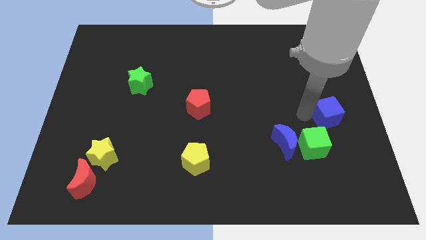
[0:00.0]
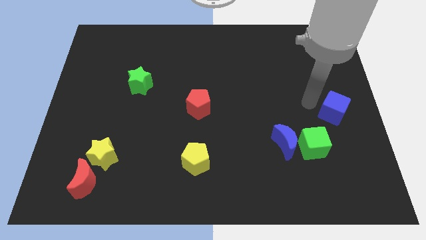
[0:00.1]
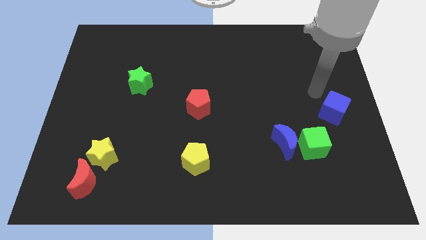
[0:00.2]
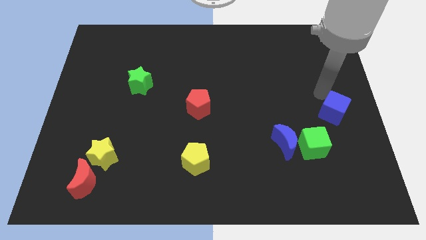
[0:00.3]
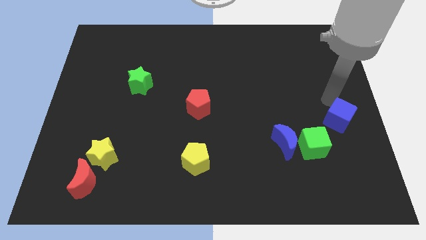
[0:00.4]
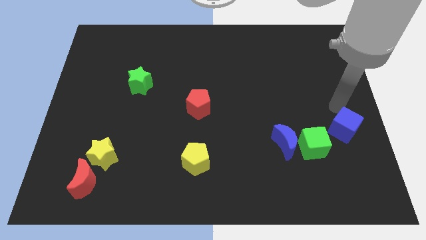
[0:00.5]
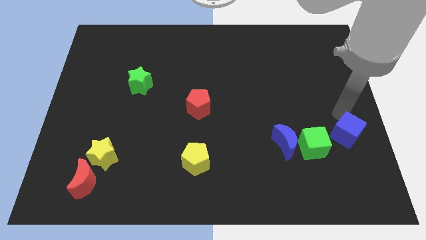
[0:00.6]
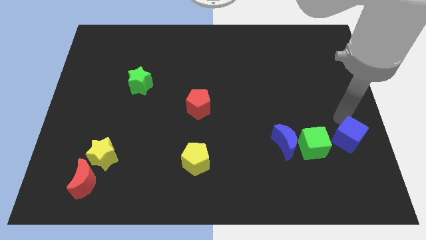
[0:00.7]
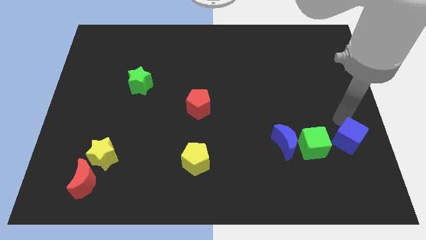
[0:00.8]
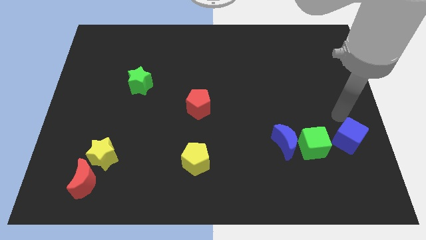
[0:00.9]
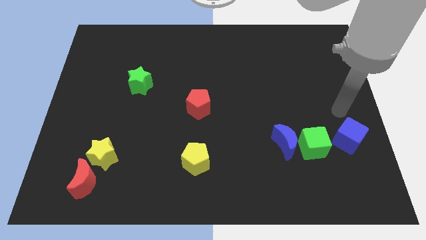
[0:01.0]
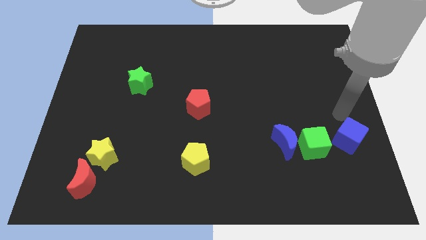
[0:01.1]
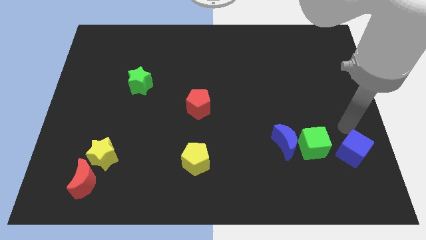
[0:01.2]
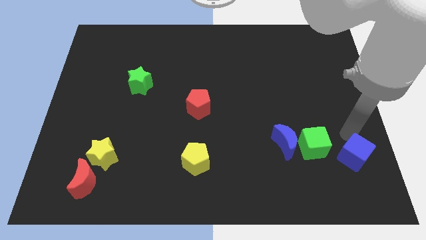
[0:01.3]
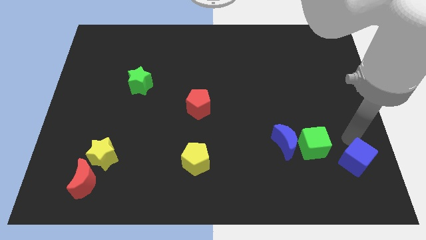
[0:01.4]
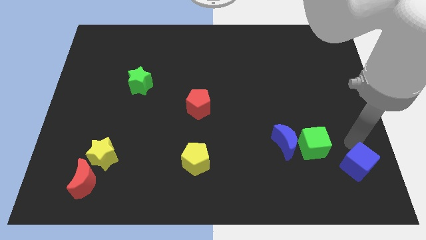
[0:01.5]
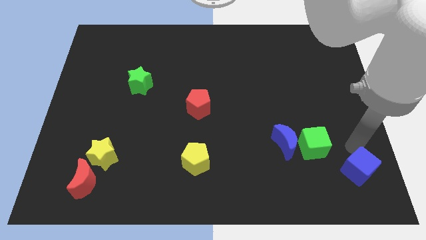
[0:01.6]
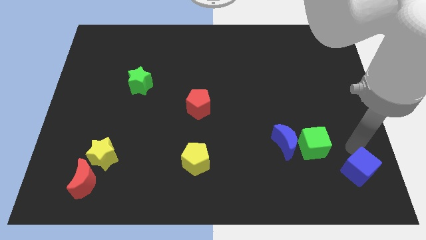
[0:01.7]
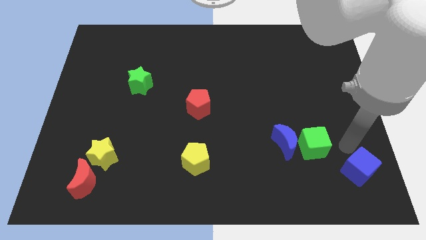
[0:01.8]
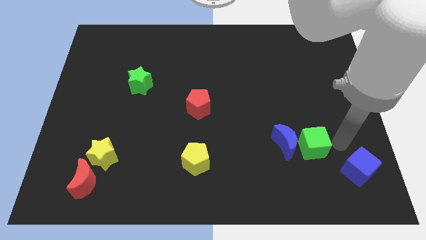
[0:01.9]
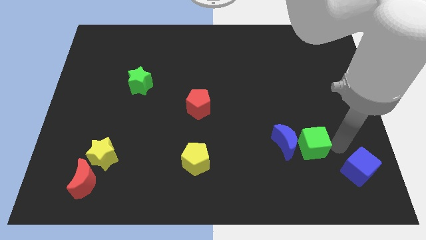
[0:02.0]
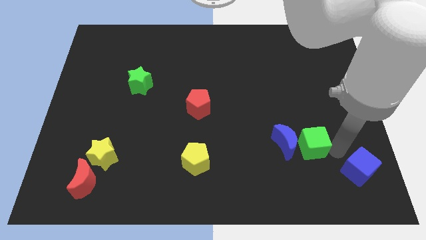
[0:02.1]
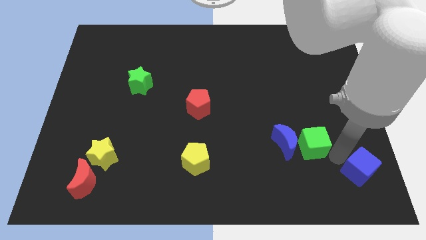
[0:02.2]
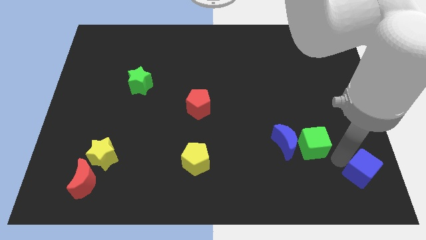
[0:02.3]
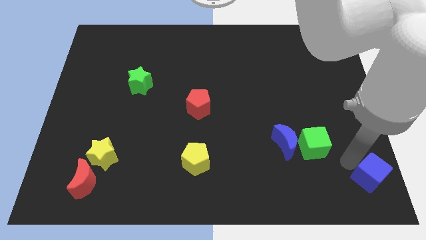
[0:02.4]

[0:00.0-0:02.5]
place the blue cube diagonally to green cube

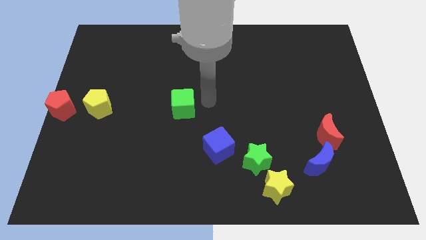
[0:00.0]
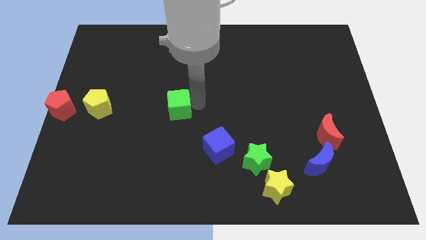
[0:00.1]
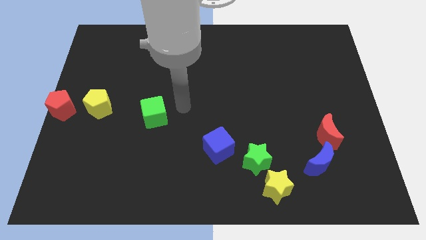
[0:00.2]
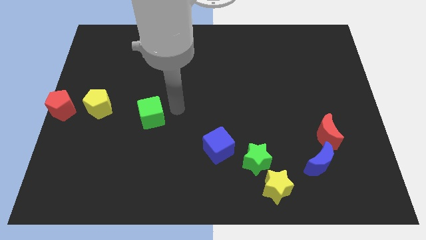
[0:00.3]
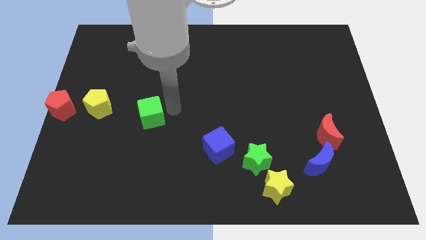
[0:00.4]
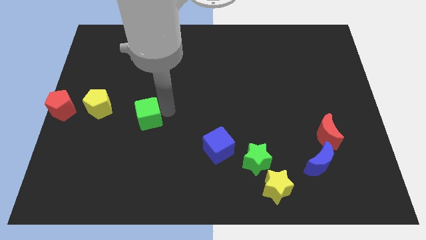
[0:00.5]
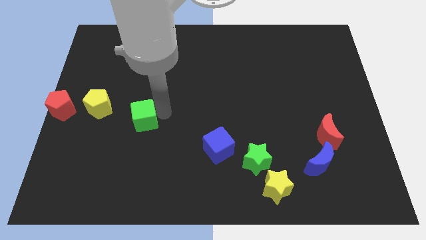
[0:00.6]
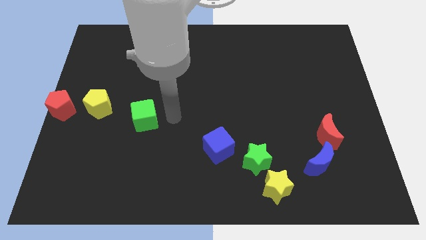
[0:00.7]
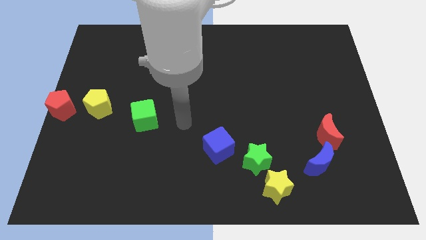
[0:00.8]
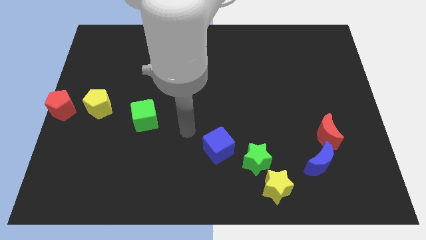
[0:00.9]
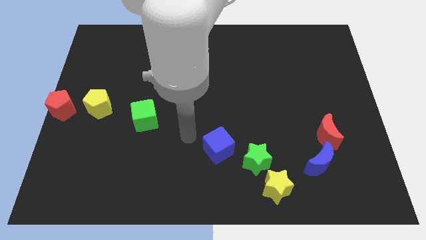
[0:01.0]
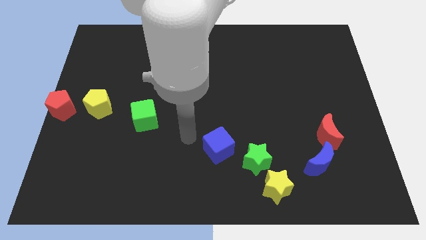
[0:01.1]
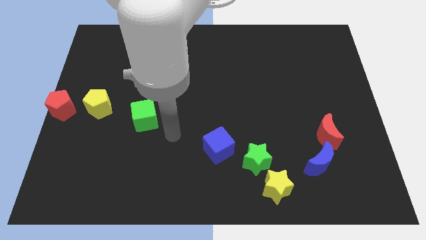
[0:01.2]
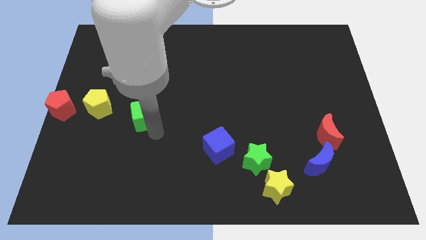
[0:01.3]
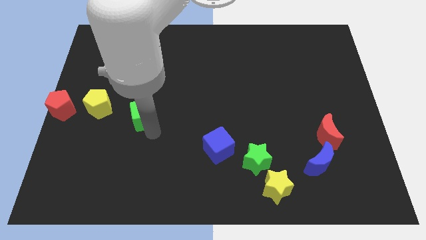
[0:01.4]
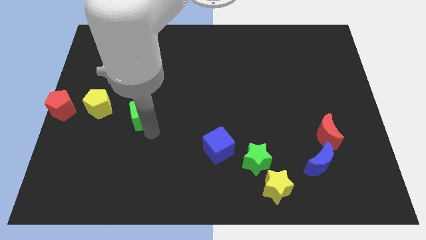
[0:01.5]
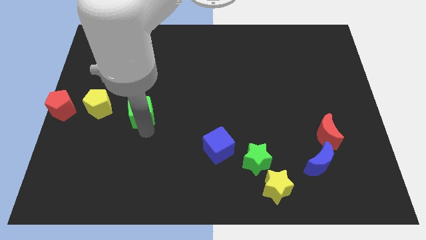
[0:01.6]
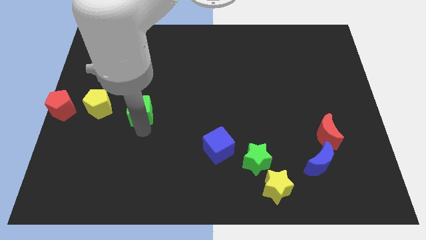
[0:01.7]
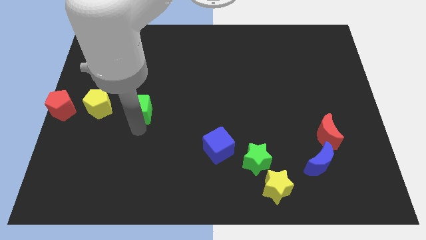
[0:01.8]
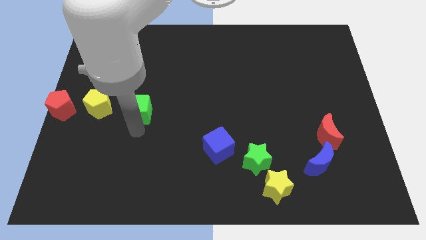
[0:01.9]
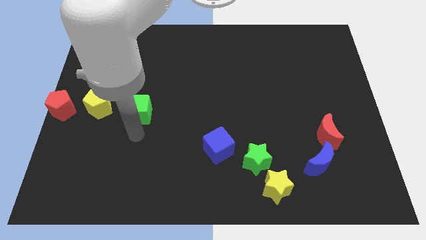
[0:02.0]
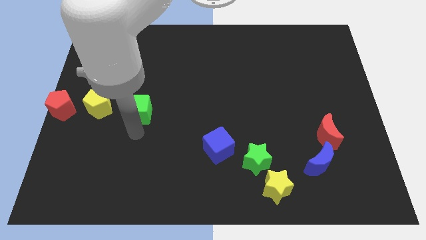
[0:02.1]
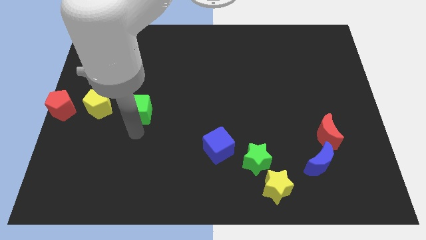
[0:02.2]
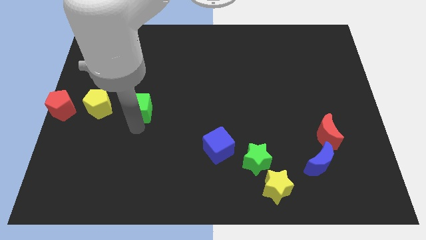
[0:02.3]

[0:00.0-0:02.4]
move the green cube right to yellow pentagon

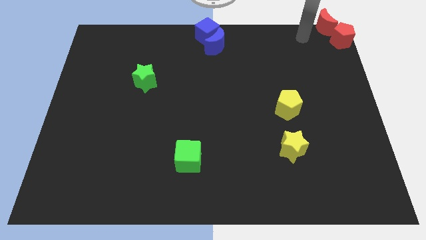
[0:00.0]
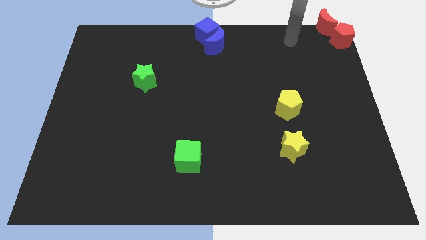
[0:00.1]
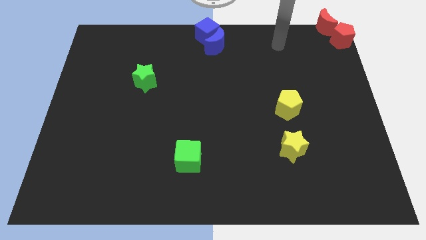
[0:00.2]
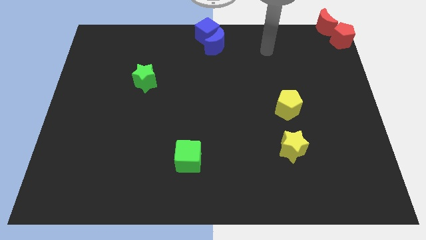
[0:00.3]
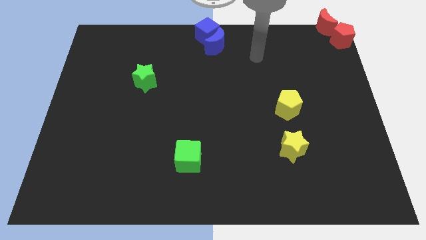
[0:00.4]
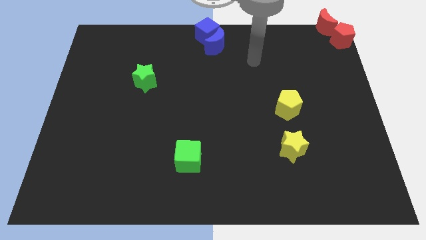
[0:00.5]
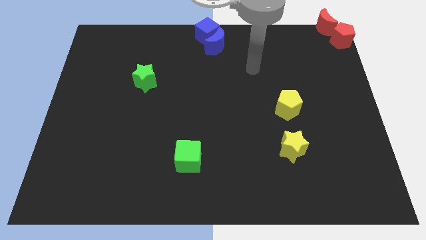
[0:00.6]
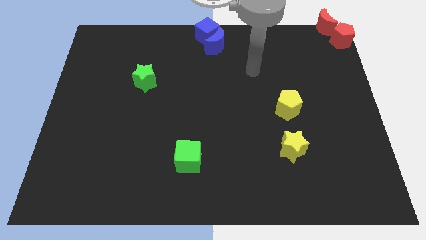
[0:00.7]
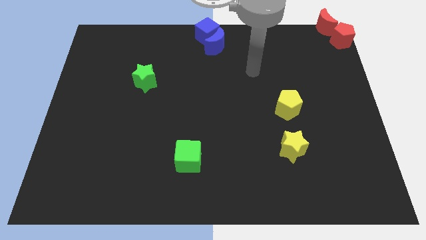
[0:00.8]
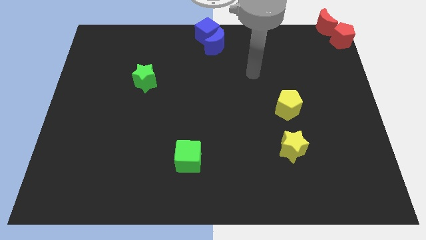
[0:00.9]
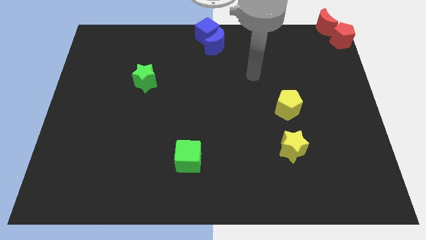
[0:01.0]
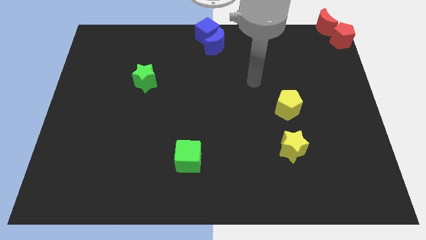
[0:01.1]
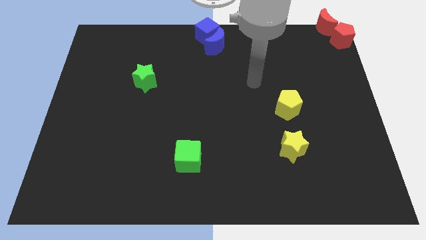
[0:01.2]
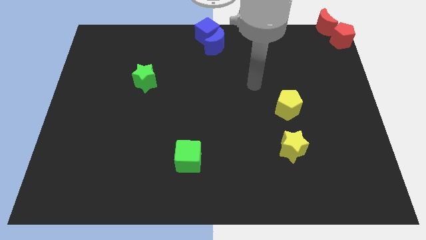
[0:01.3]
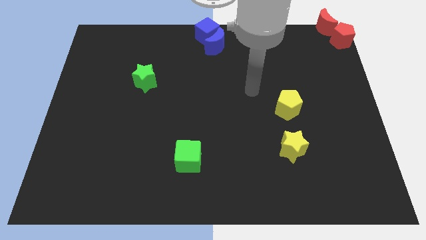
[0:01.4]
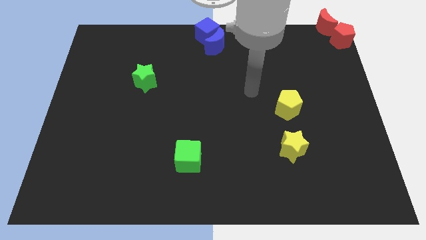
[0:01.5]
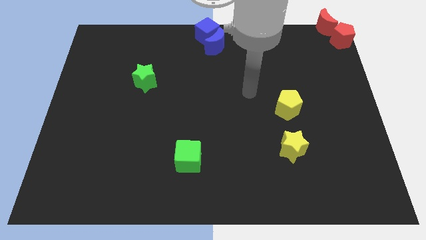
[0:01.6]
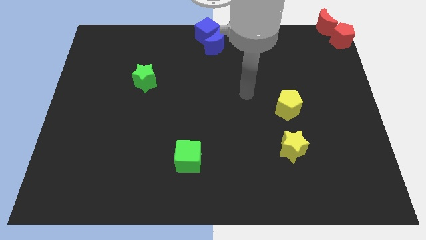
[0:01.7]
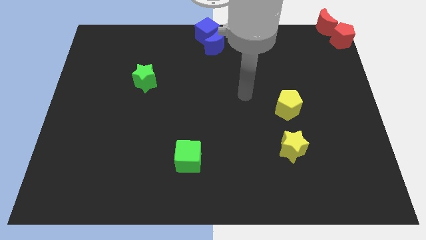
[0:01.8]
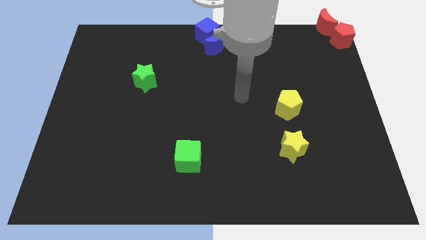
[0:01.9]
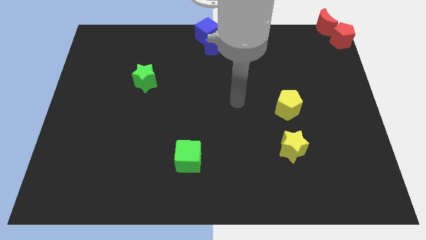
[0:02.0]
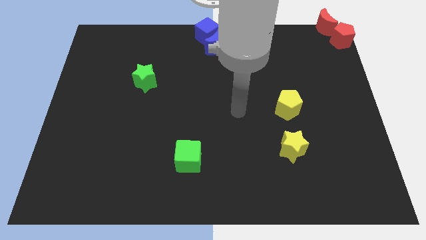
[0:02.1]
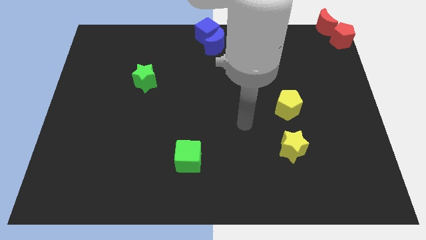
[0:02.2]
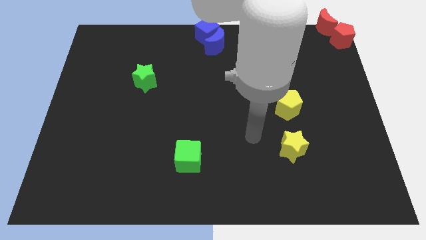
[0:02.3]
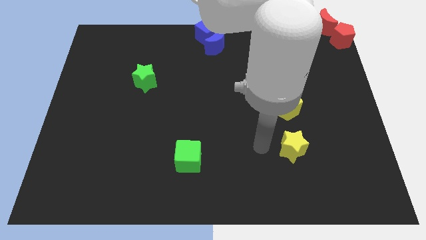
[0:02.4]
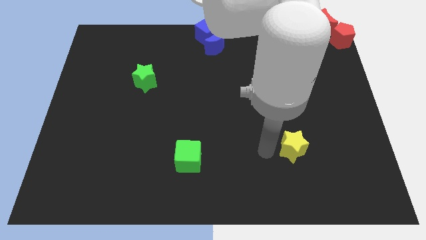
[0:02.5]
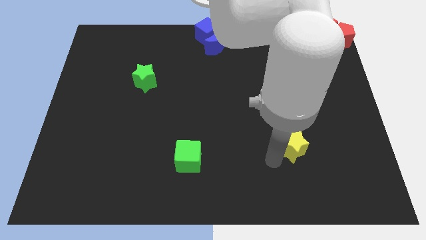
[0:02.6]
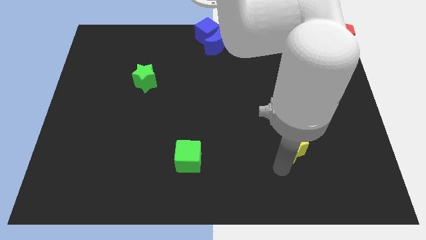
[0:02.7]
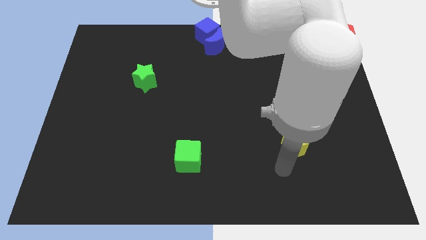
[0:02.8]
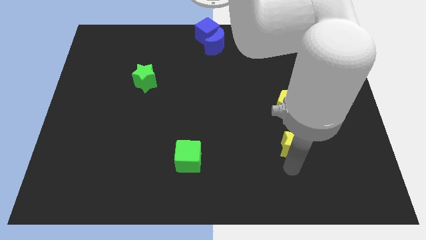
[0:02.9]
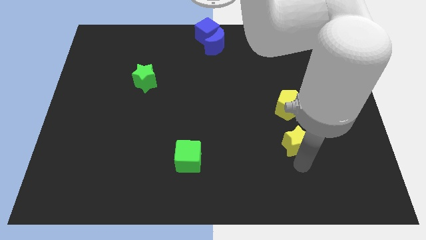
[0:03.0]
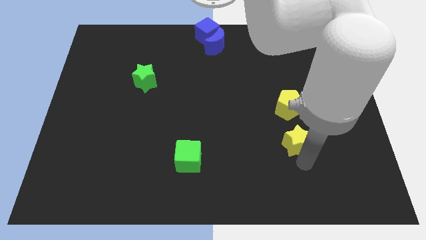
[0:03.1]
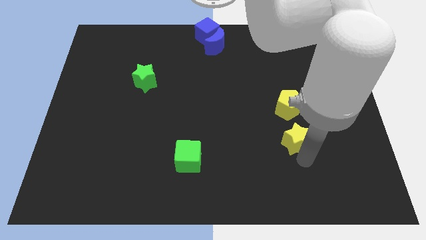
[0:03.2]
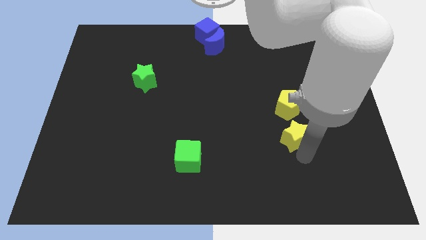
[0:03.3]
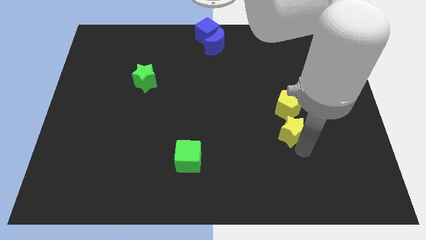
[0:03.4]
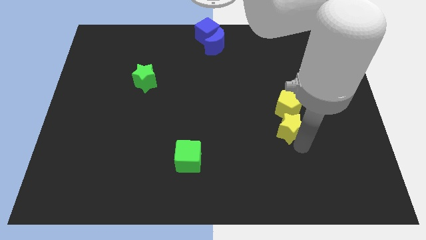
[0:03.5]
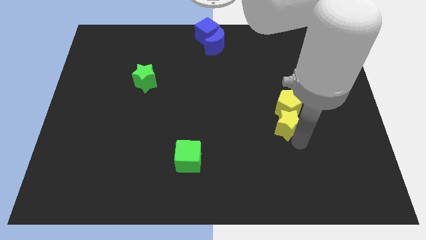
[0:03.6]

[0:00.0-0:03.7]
move the yellow star to the bottom of the yellow pentagon

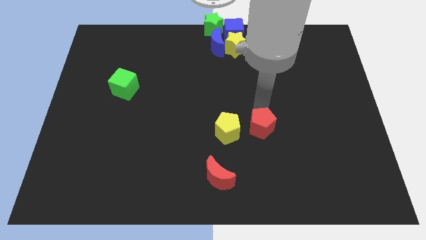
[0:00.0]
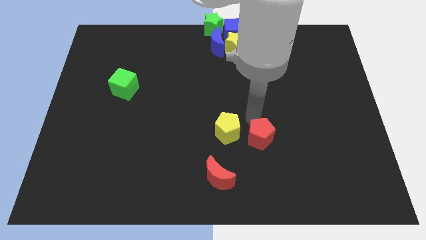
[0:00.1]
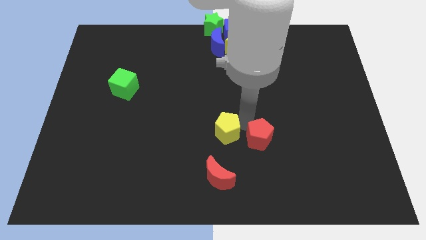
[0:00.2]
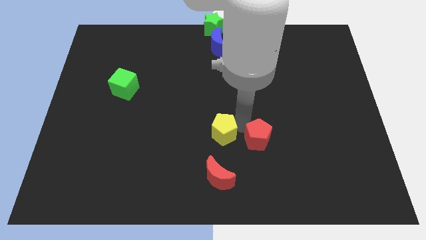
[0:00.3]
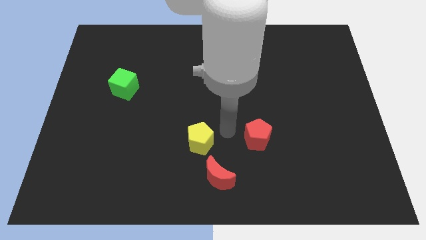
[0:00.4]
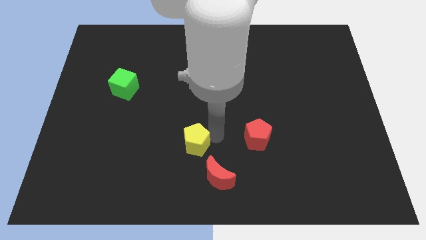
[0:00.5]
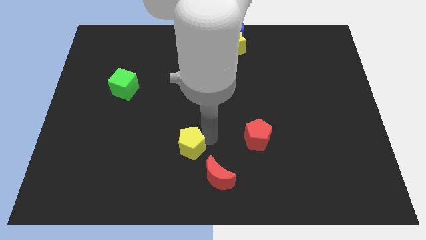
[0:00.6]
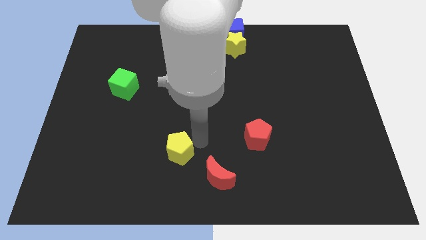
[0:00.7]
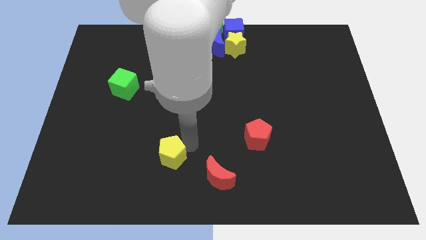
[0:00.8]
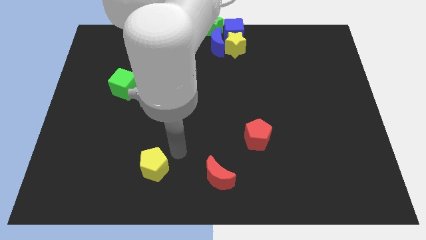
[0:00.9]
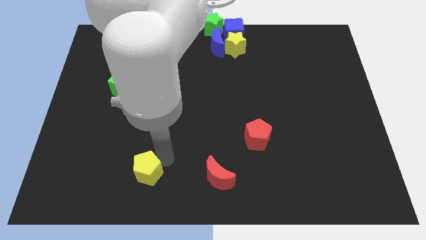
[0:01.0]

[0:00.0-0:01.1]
place the yellow pentagon to the left of the red moon
